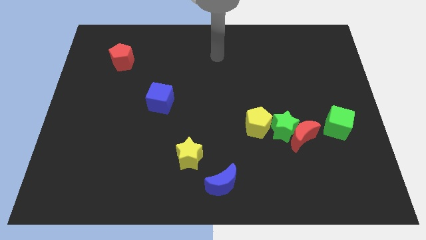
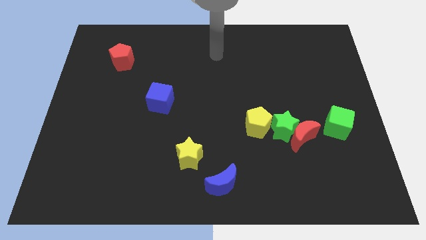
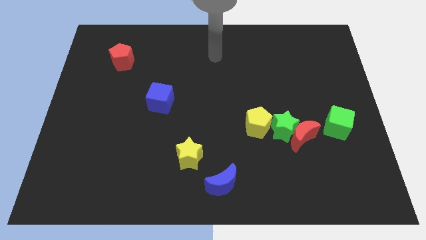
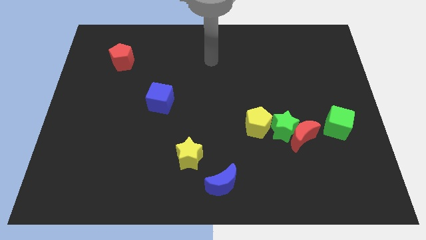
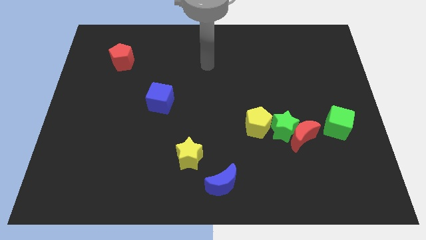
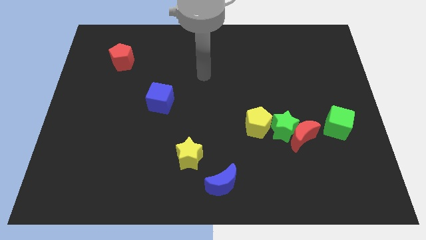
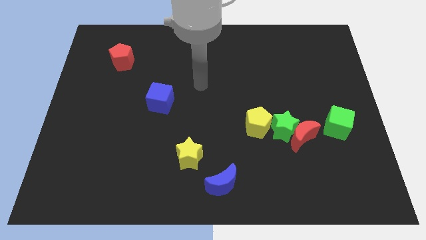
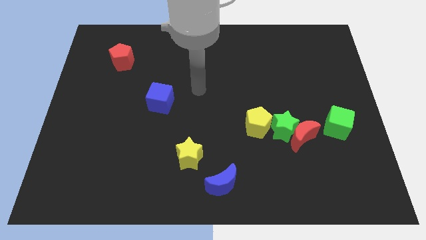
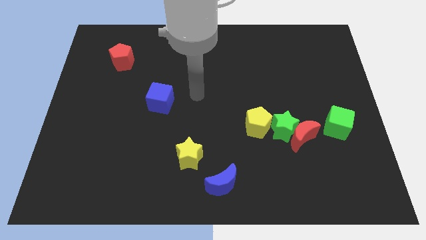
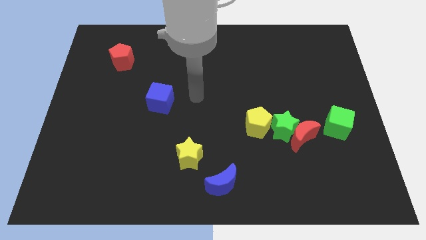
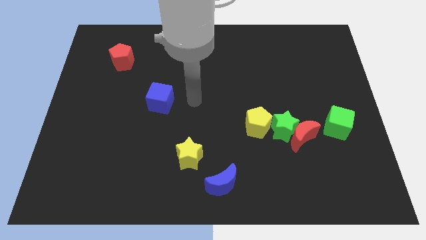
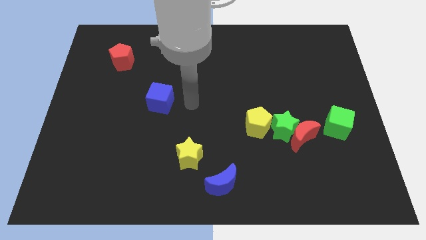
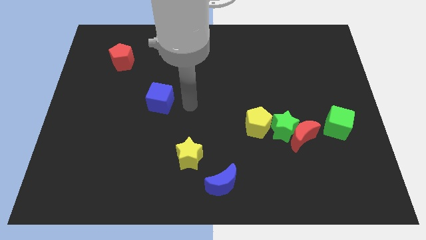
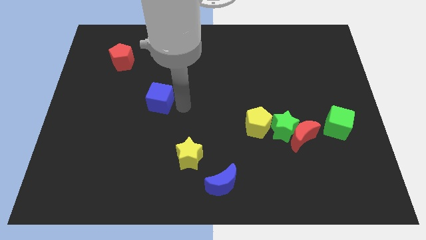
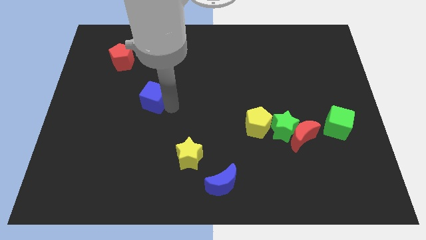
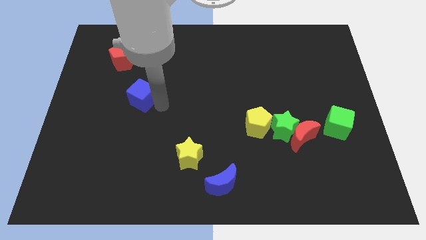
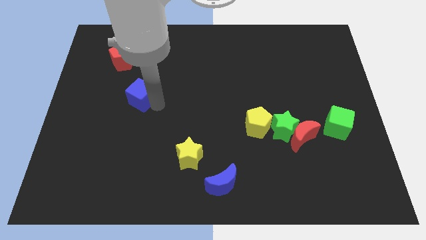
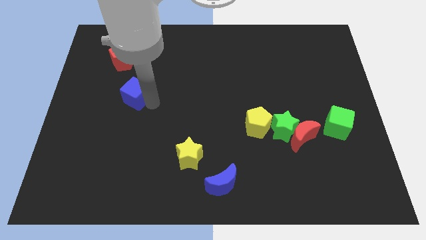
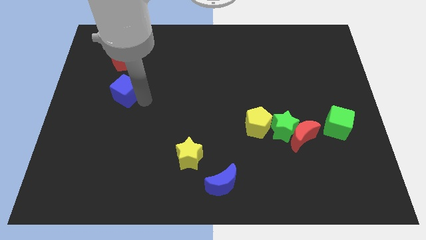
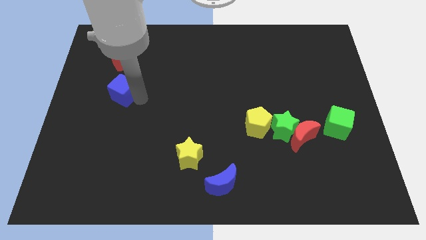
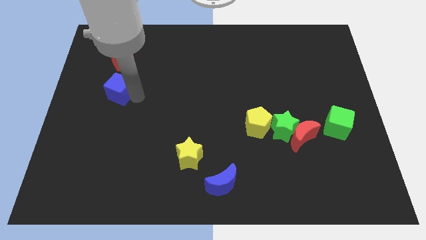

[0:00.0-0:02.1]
push blue cube below red pentagon

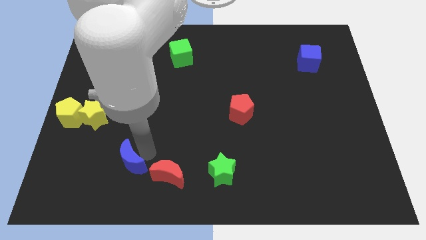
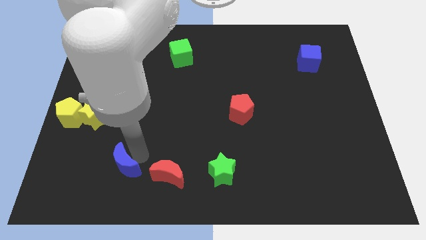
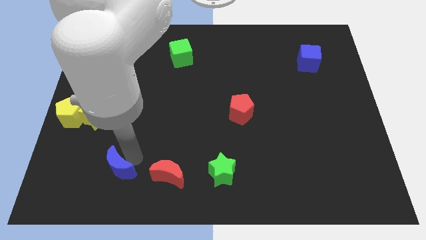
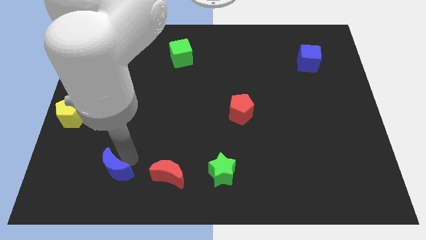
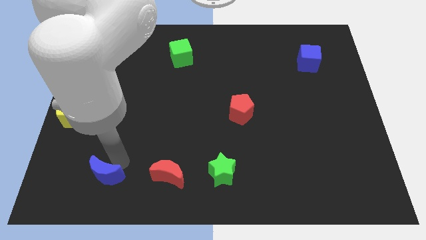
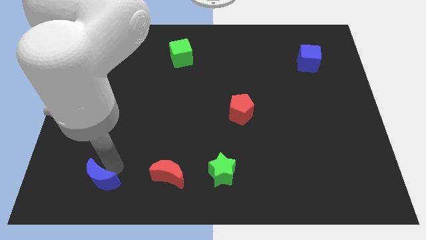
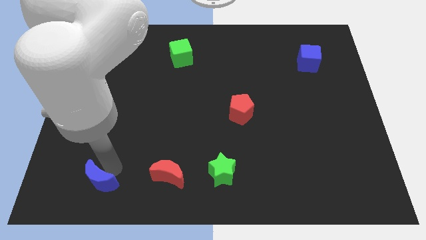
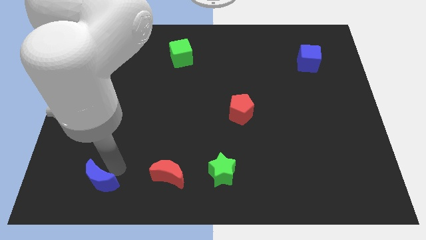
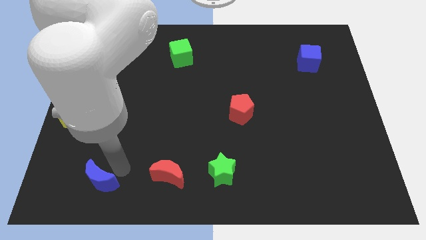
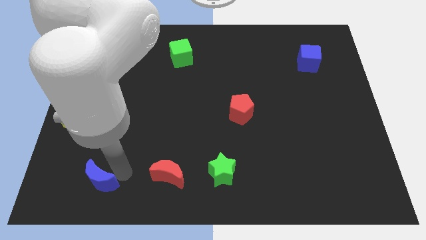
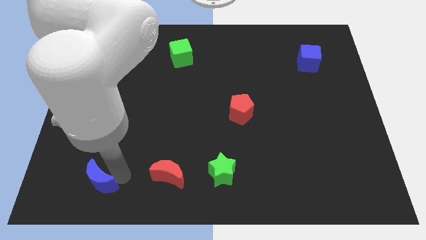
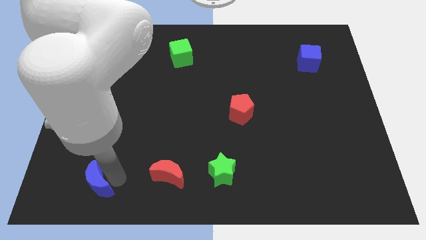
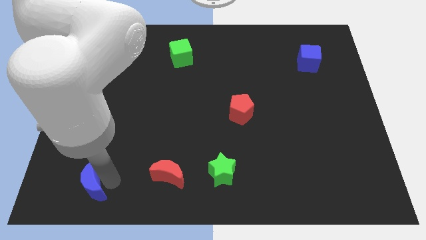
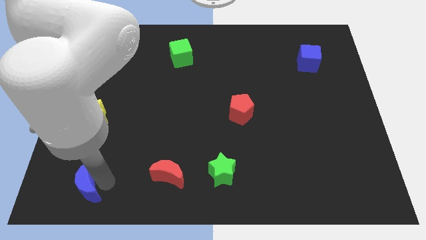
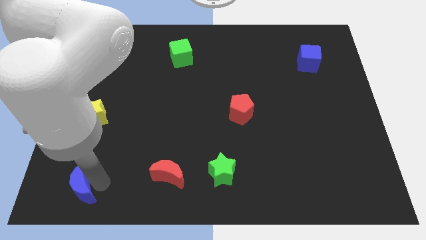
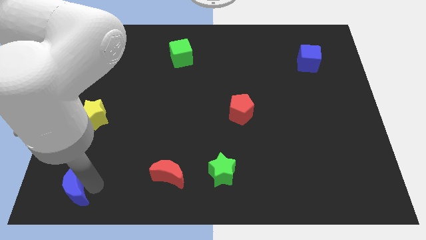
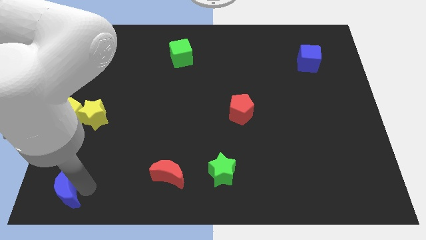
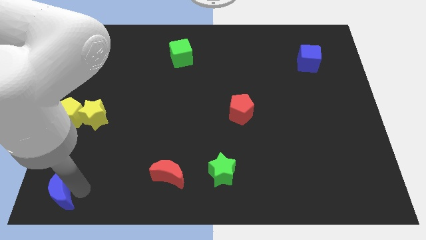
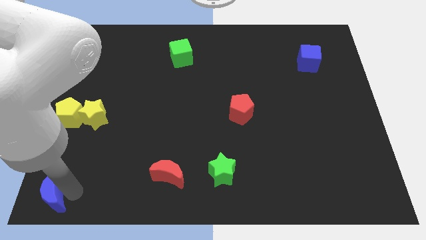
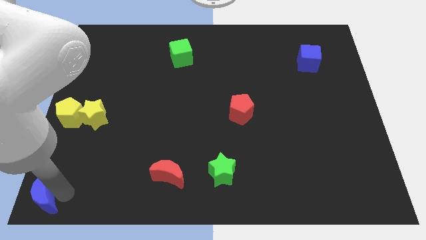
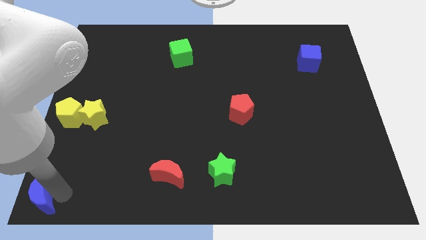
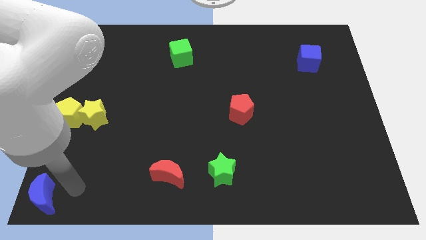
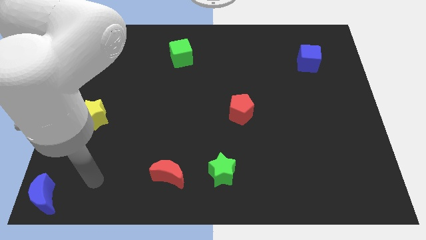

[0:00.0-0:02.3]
push the blue moon towards bottom left

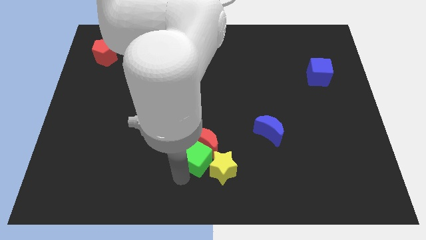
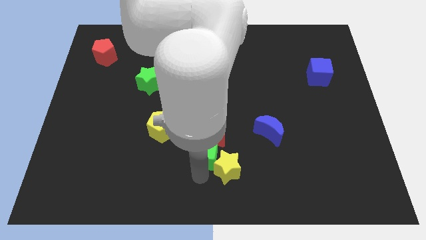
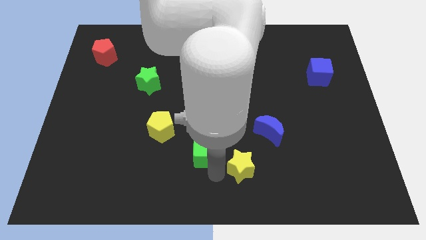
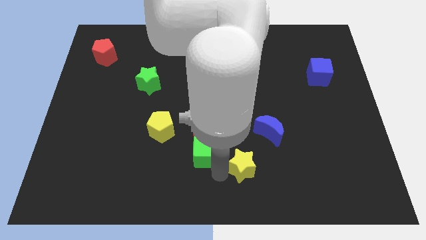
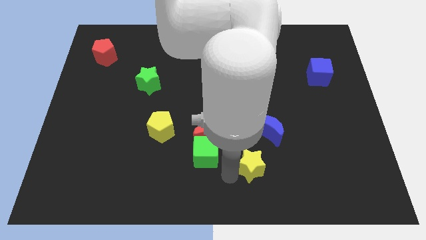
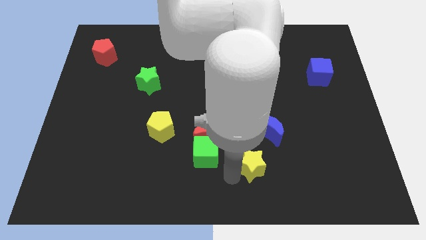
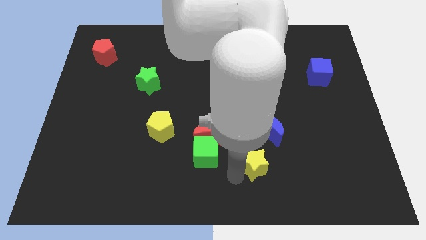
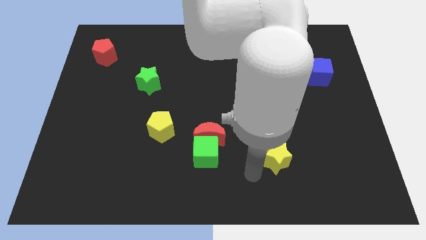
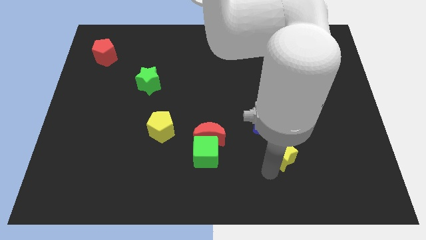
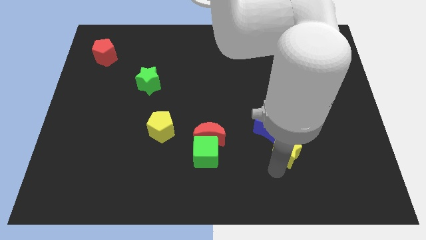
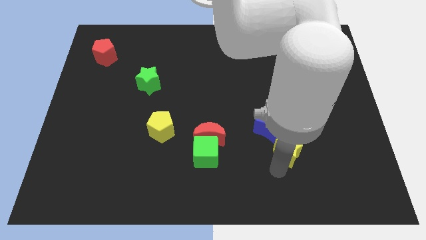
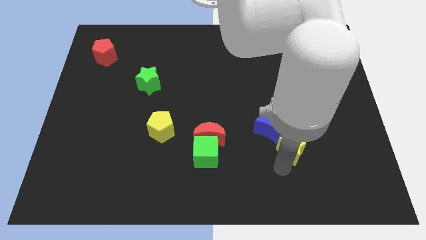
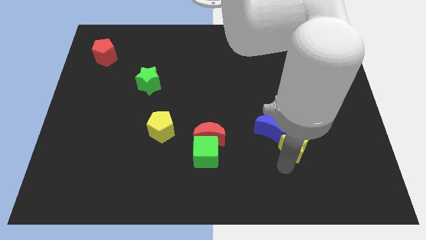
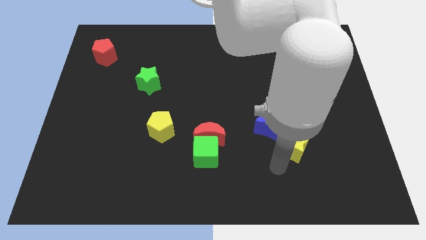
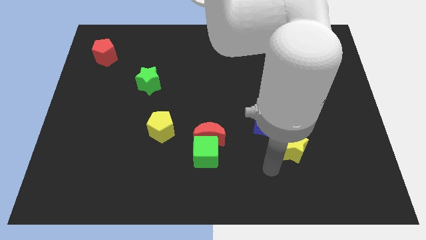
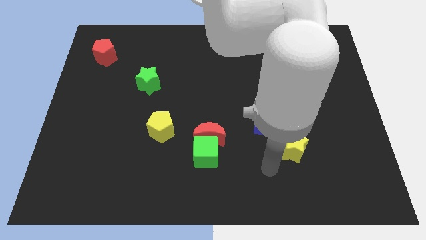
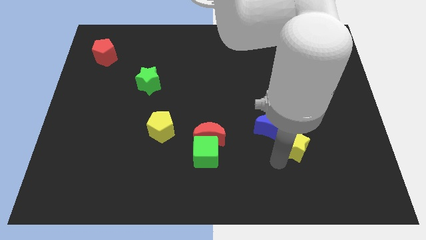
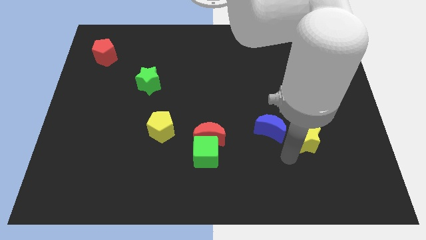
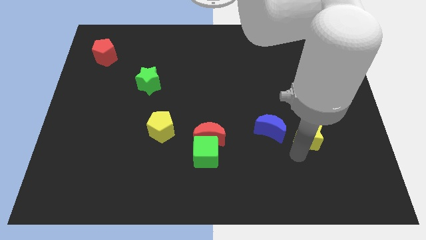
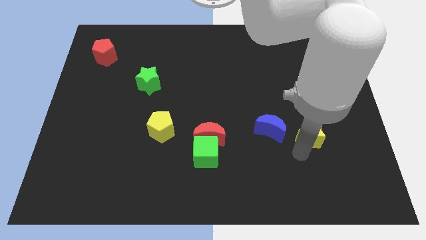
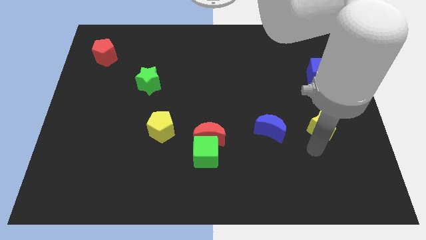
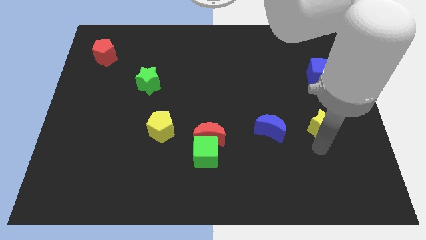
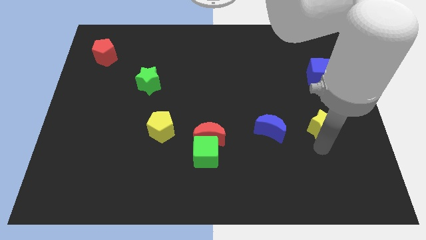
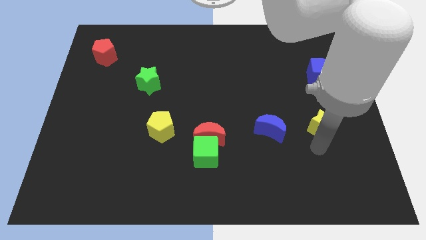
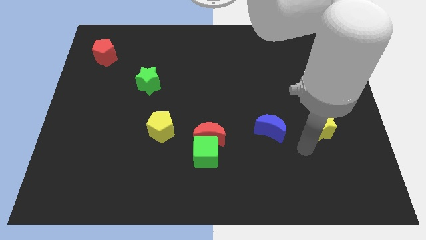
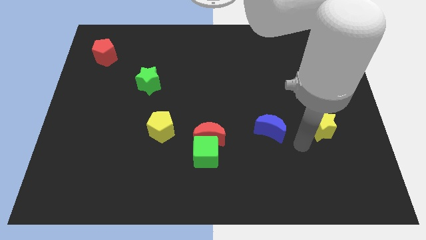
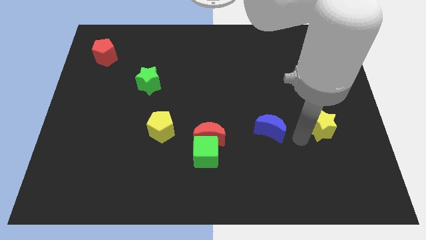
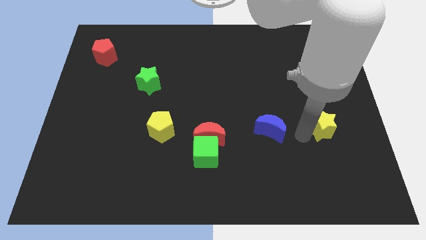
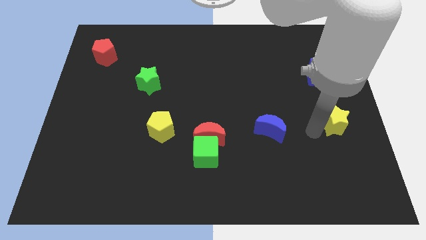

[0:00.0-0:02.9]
push the yellow star horizontally to the right side of the blue moon

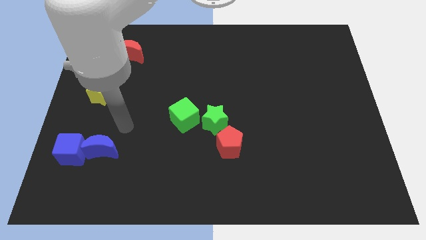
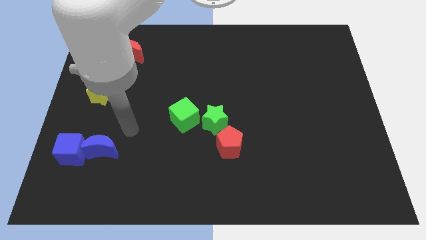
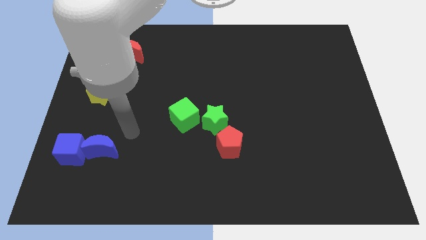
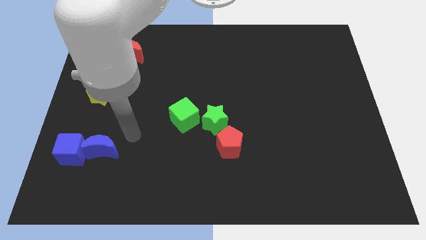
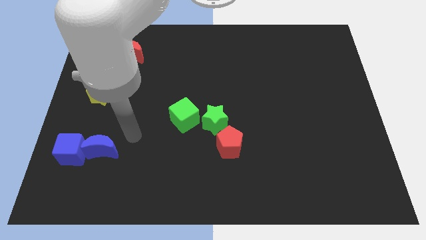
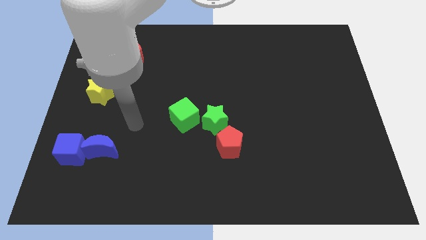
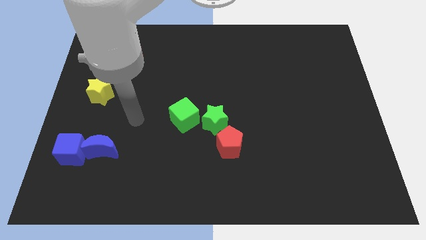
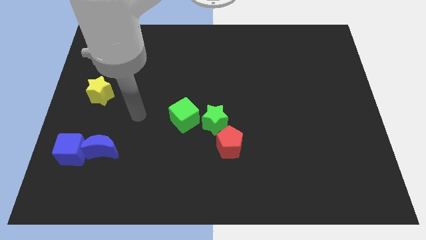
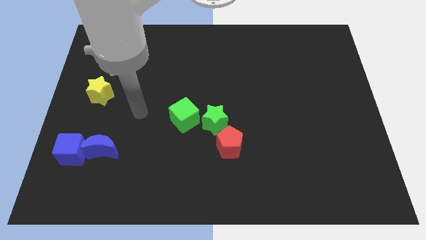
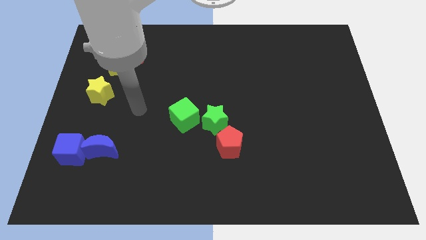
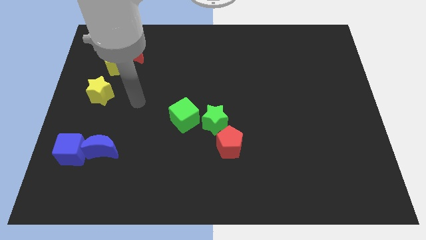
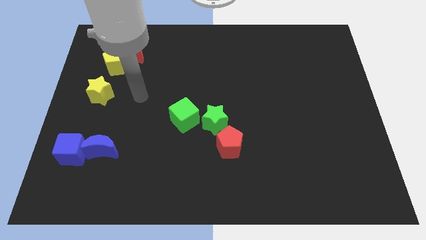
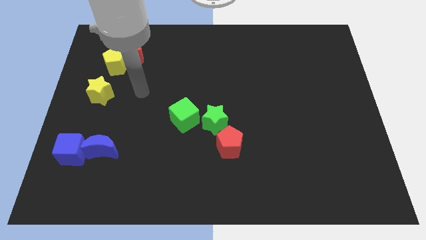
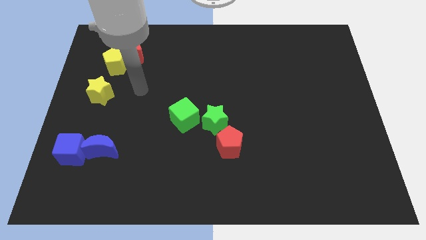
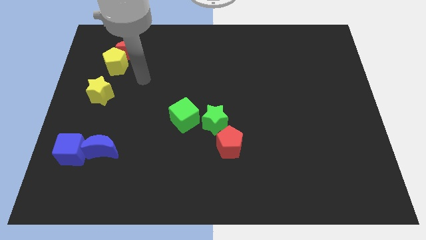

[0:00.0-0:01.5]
move the arm towards the red crescent
